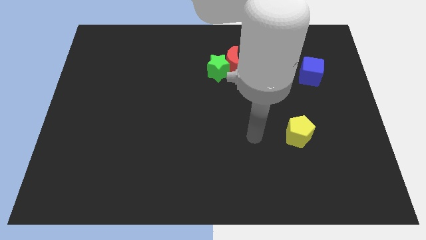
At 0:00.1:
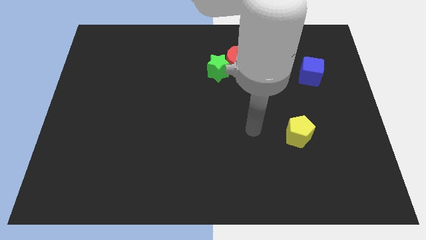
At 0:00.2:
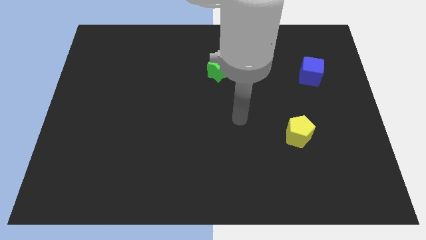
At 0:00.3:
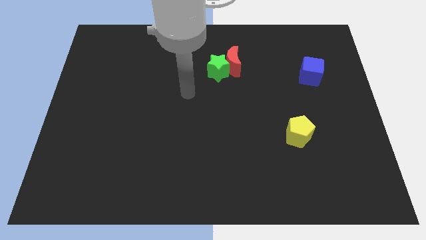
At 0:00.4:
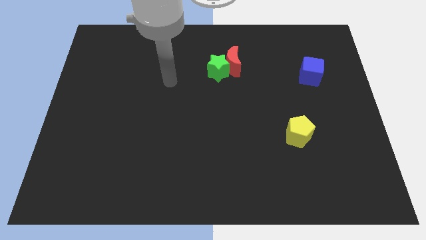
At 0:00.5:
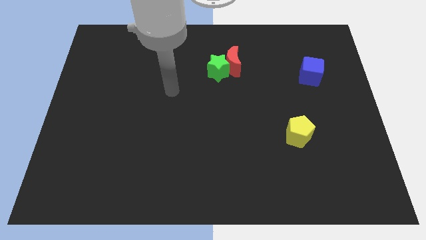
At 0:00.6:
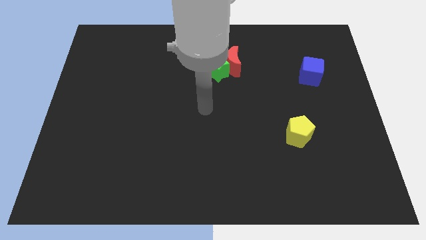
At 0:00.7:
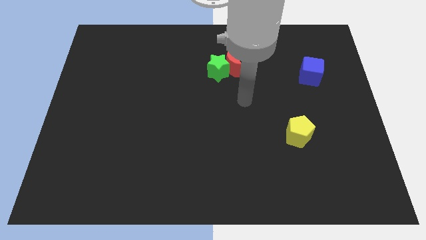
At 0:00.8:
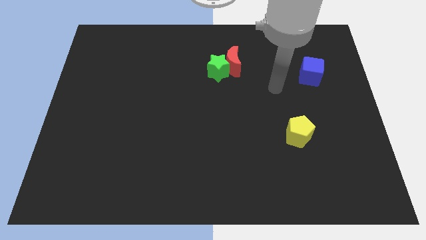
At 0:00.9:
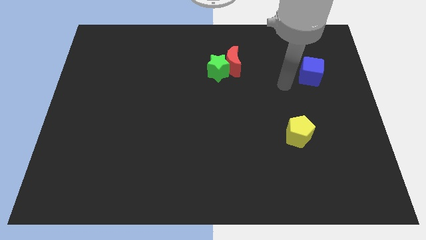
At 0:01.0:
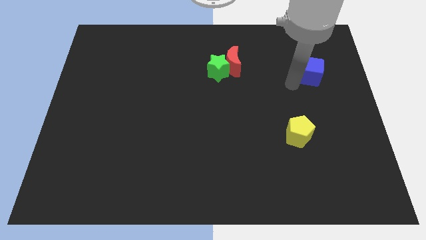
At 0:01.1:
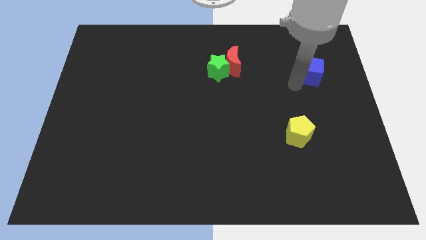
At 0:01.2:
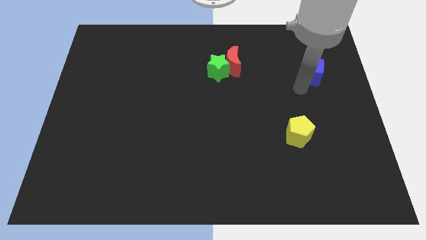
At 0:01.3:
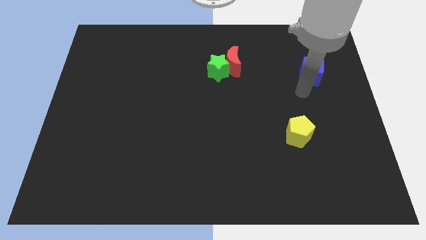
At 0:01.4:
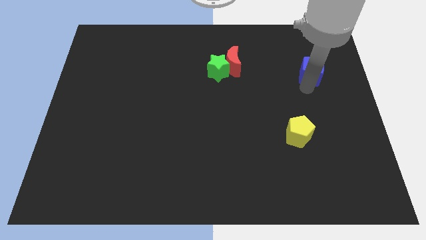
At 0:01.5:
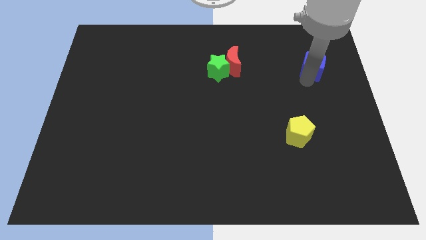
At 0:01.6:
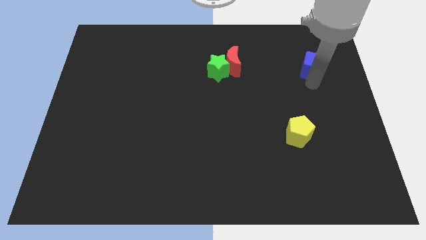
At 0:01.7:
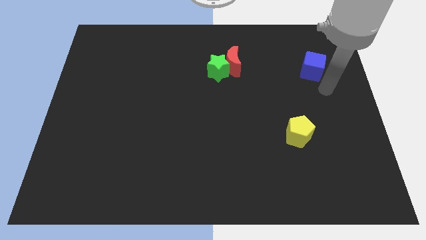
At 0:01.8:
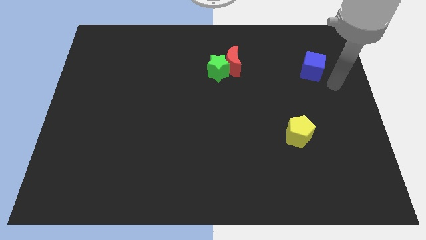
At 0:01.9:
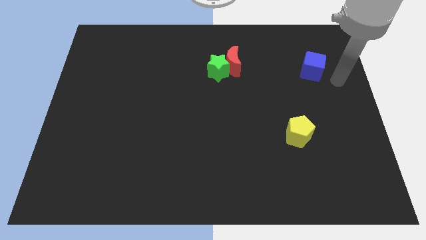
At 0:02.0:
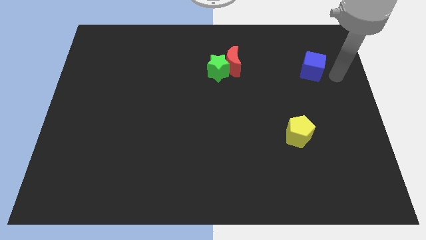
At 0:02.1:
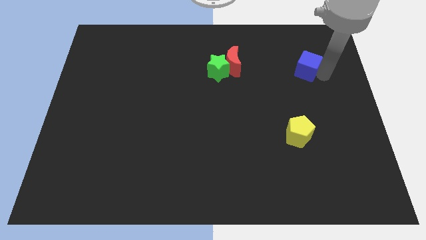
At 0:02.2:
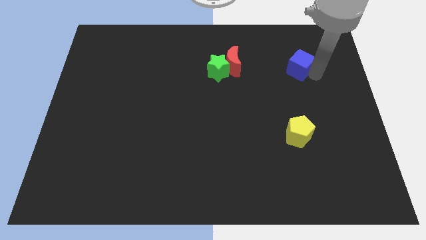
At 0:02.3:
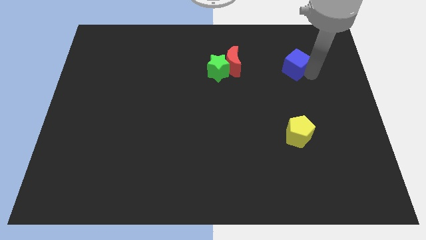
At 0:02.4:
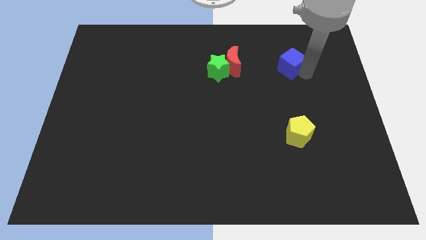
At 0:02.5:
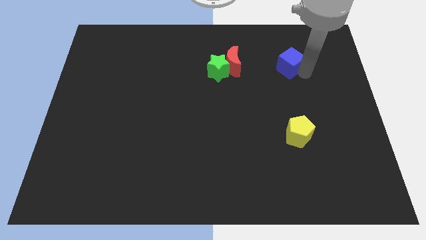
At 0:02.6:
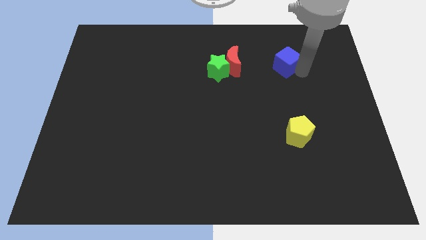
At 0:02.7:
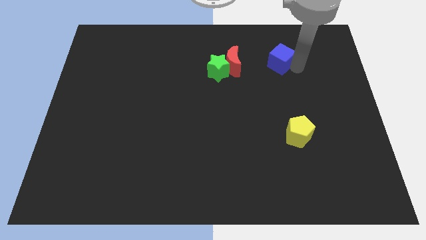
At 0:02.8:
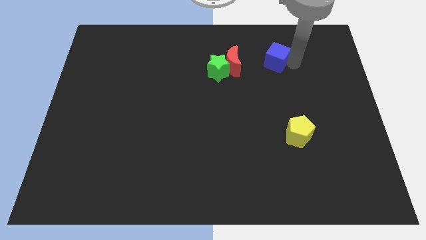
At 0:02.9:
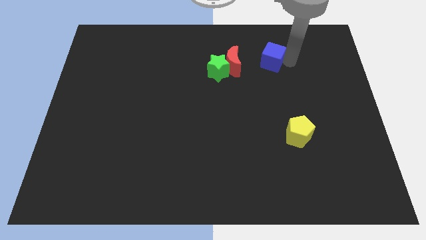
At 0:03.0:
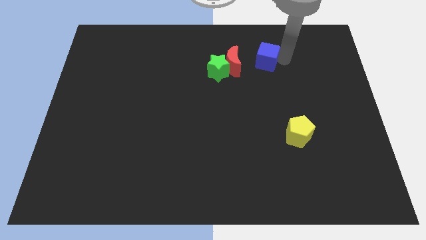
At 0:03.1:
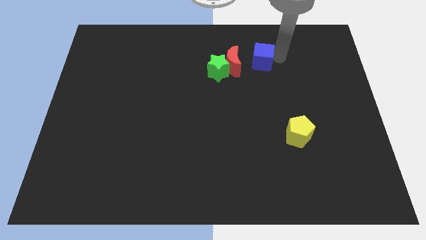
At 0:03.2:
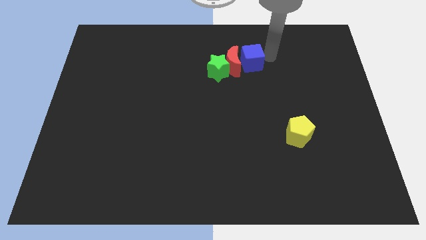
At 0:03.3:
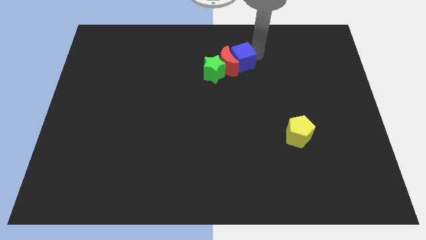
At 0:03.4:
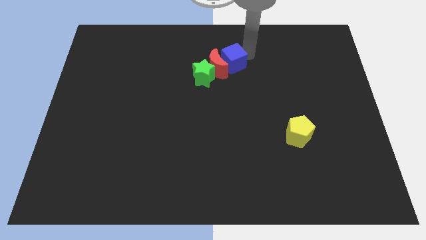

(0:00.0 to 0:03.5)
move the blue block to the red moon

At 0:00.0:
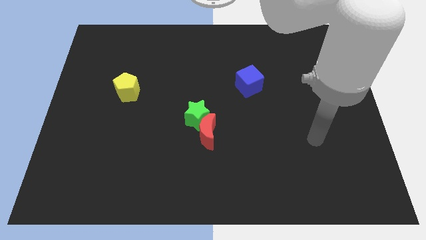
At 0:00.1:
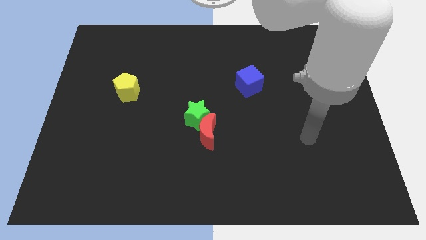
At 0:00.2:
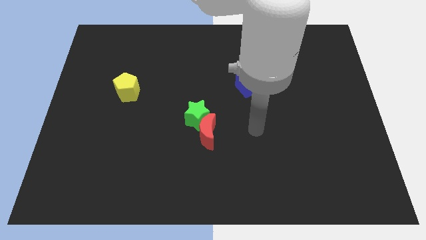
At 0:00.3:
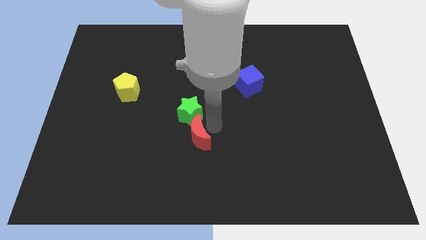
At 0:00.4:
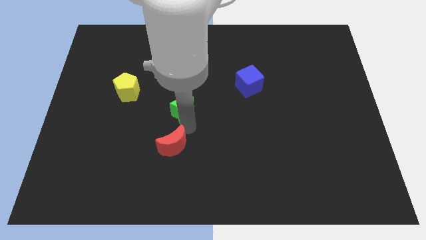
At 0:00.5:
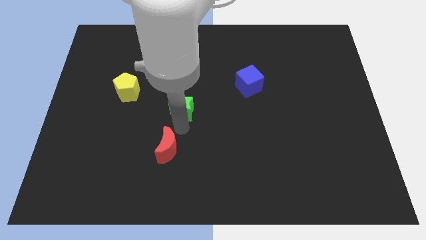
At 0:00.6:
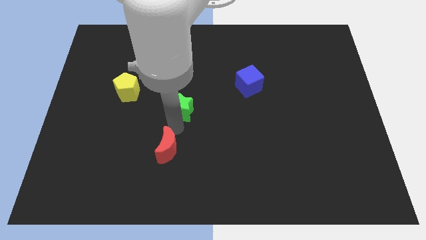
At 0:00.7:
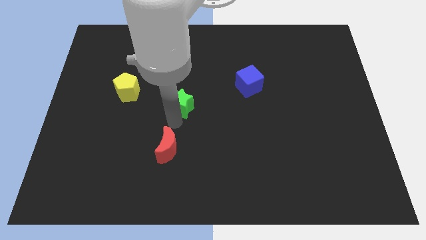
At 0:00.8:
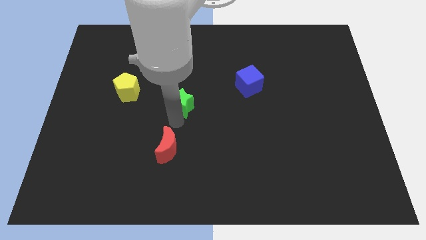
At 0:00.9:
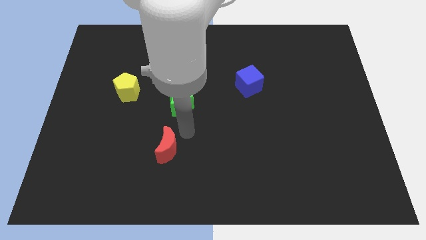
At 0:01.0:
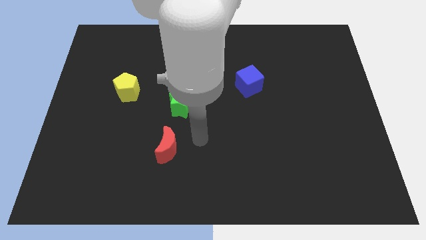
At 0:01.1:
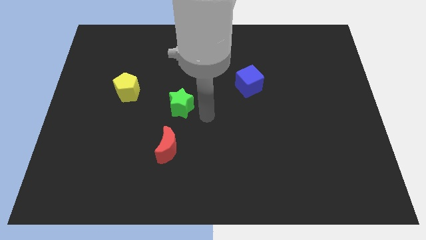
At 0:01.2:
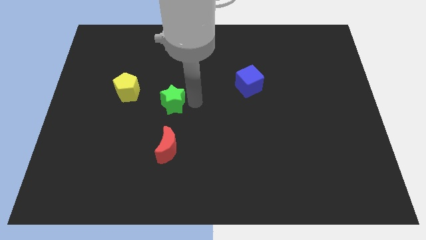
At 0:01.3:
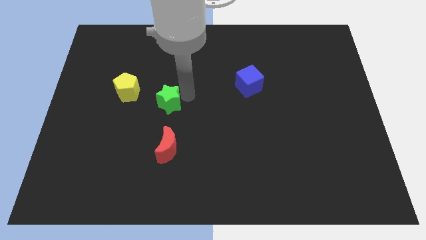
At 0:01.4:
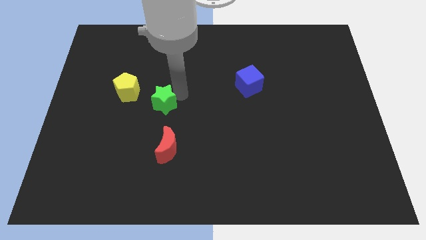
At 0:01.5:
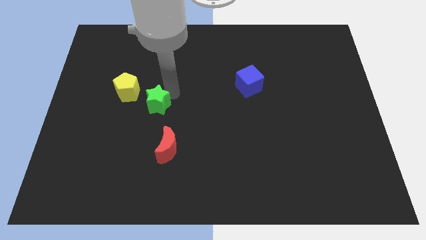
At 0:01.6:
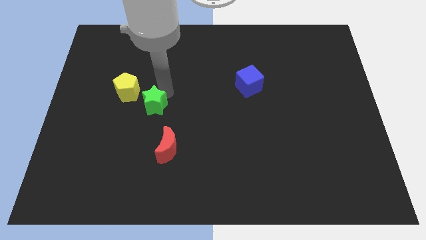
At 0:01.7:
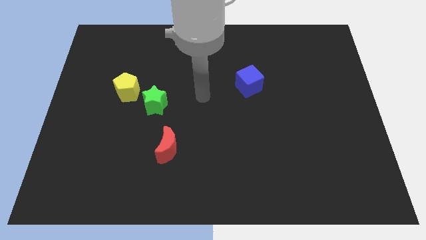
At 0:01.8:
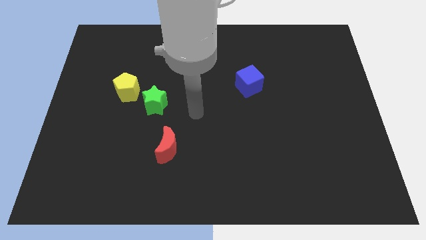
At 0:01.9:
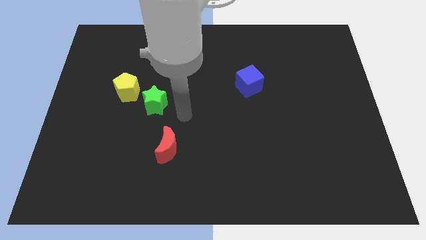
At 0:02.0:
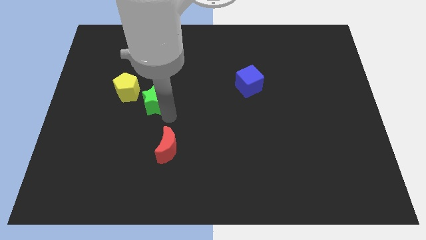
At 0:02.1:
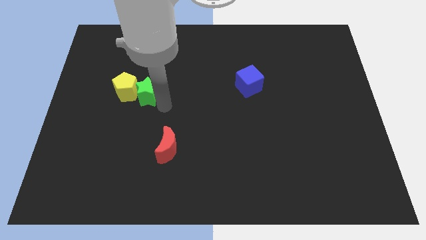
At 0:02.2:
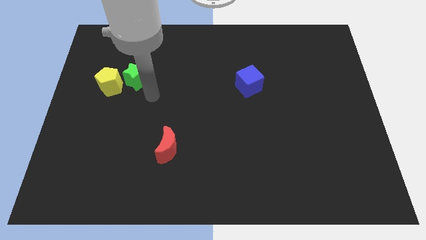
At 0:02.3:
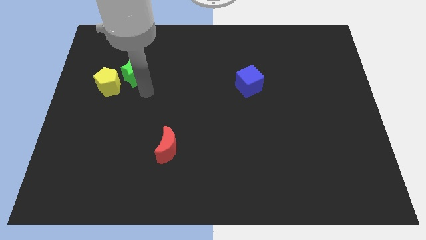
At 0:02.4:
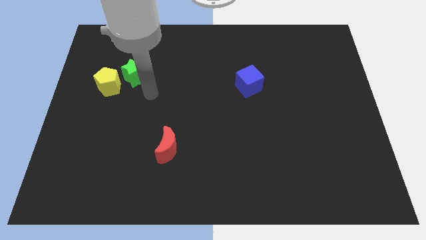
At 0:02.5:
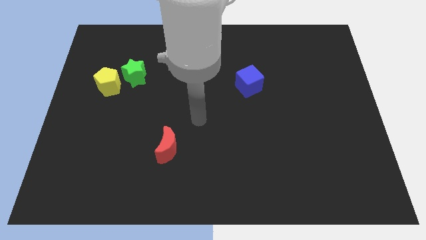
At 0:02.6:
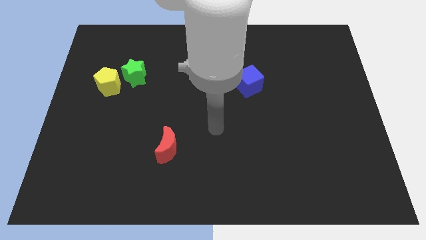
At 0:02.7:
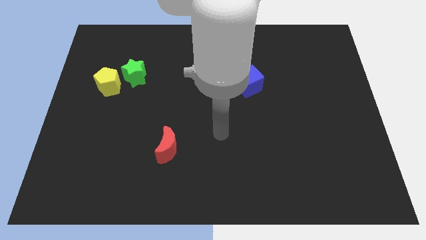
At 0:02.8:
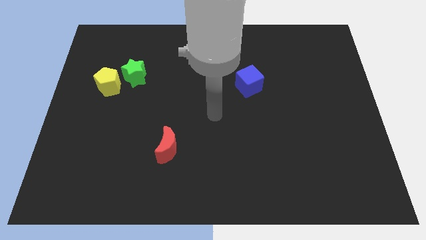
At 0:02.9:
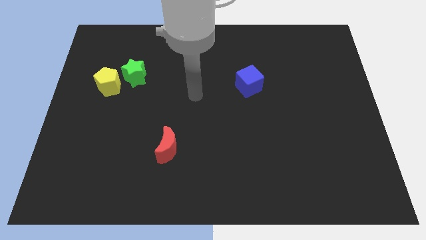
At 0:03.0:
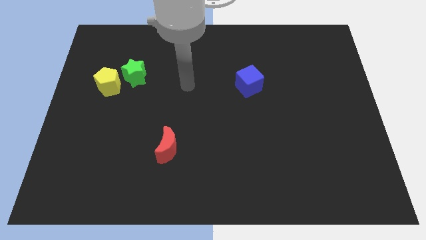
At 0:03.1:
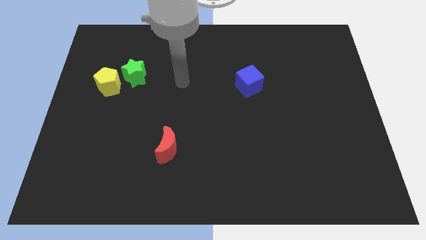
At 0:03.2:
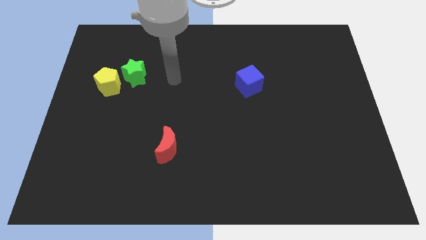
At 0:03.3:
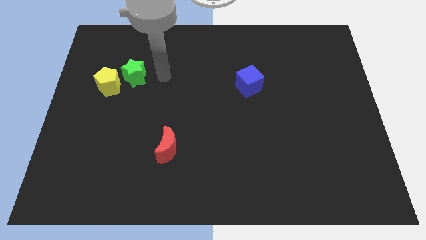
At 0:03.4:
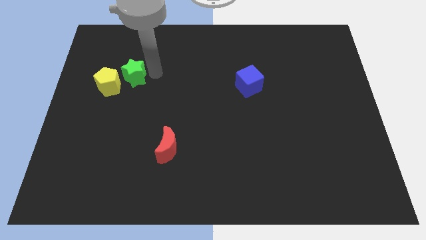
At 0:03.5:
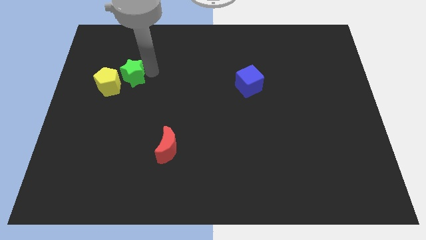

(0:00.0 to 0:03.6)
slide the star towards the yellow pentagon

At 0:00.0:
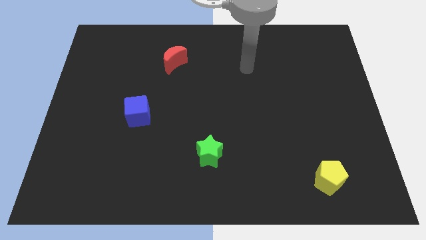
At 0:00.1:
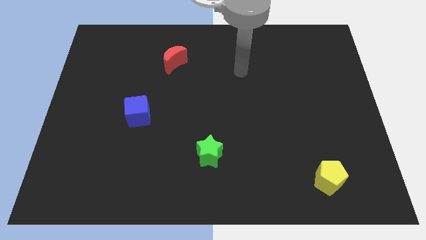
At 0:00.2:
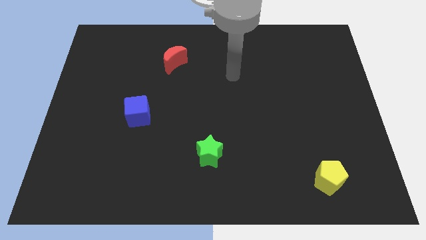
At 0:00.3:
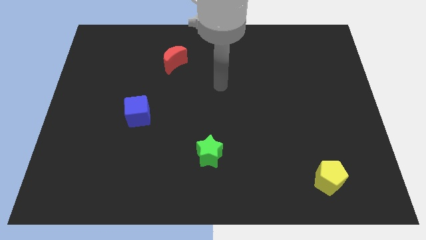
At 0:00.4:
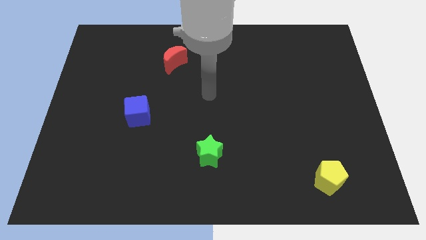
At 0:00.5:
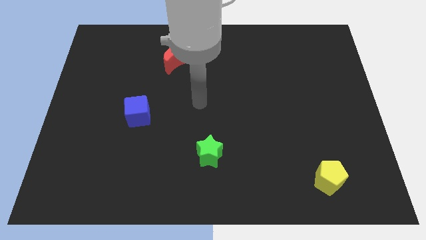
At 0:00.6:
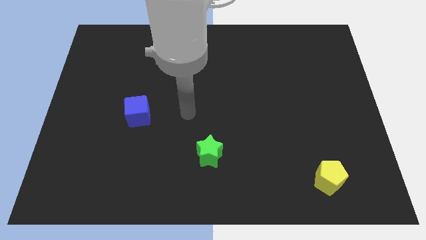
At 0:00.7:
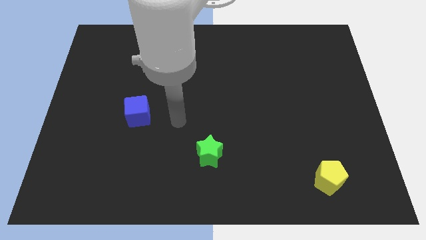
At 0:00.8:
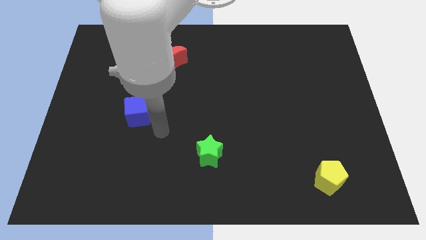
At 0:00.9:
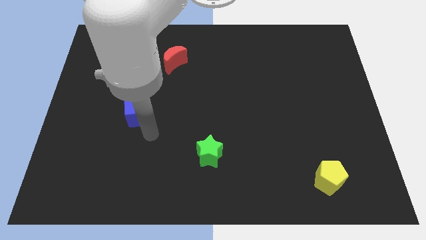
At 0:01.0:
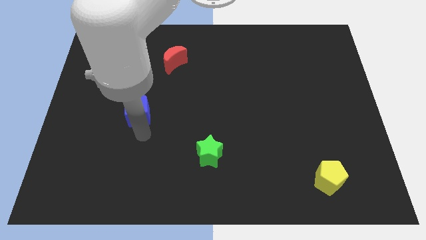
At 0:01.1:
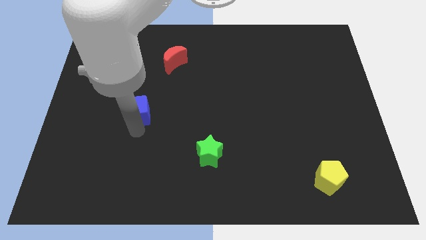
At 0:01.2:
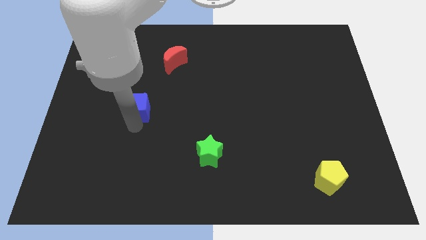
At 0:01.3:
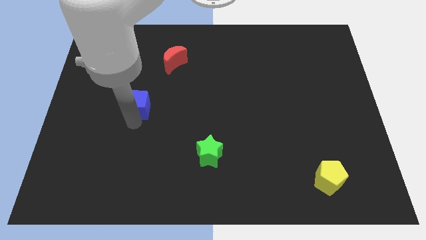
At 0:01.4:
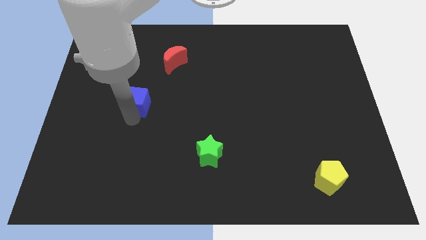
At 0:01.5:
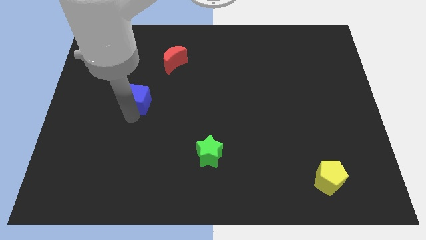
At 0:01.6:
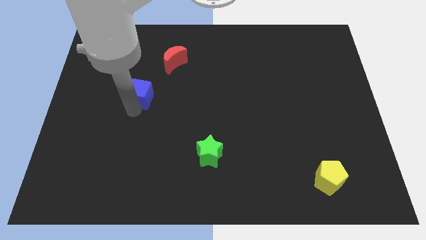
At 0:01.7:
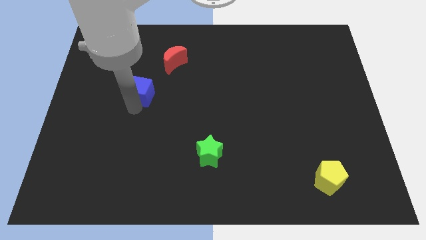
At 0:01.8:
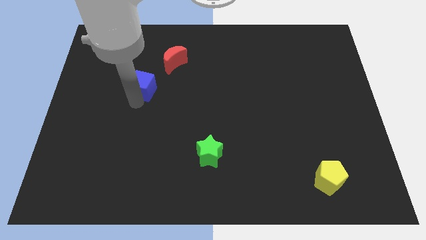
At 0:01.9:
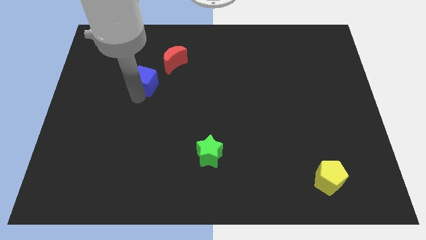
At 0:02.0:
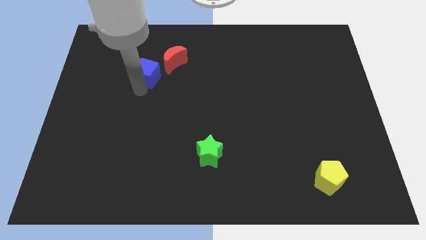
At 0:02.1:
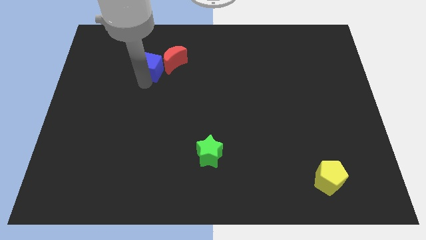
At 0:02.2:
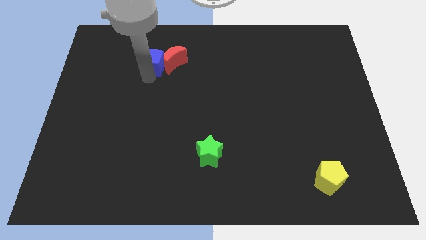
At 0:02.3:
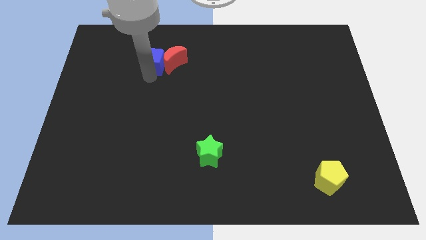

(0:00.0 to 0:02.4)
put the cube towards the red moon
